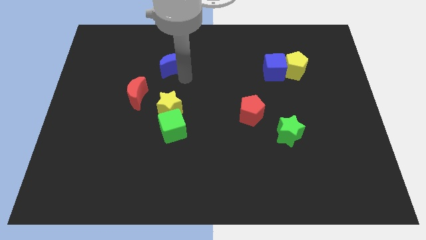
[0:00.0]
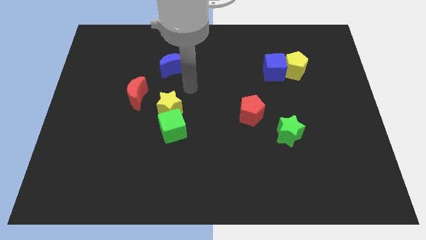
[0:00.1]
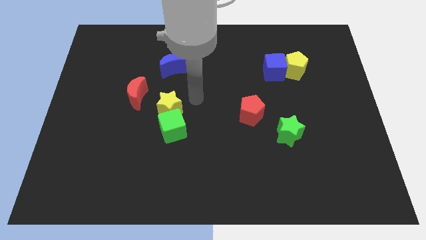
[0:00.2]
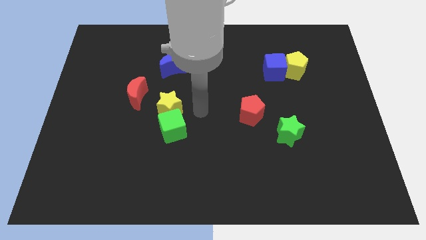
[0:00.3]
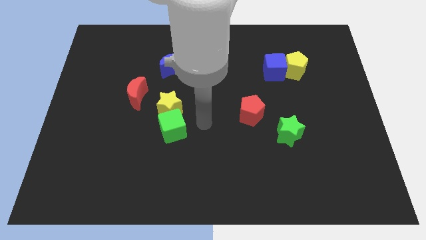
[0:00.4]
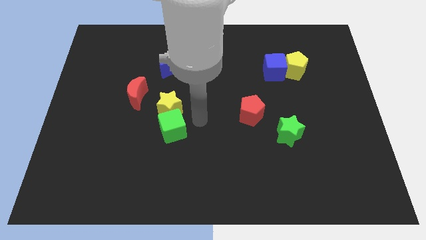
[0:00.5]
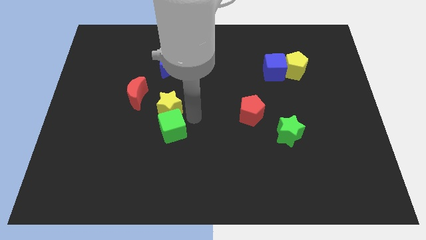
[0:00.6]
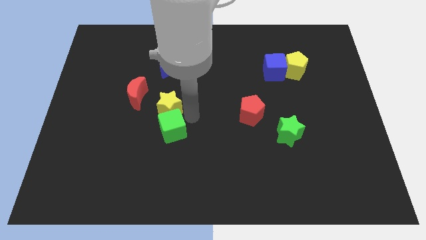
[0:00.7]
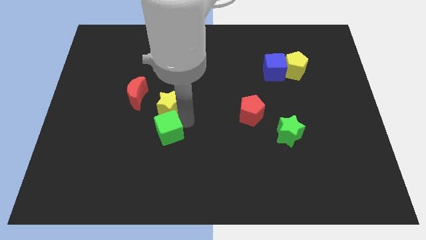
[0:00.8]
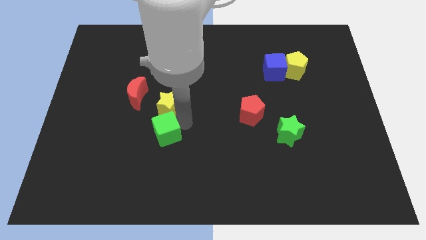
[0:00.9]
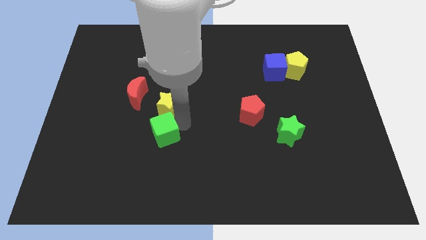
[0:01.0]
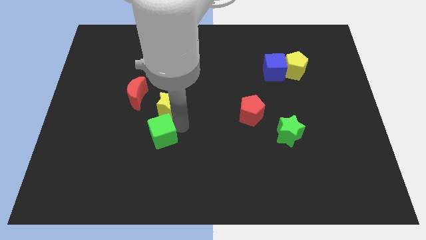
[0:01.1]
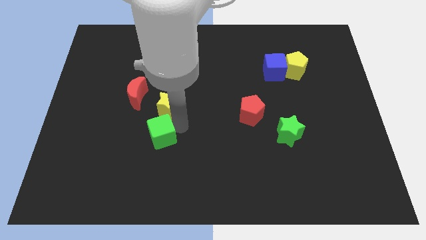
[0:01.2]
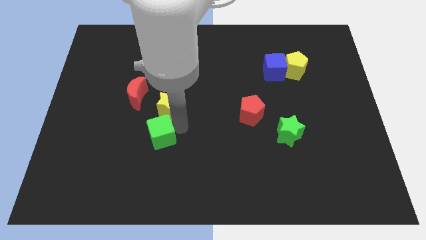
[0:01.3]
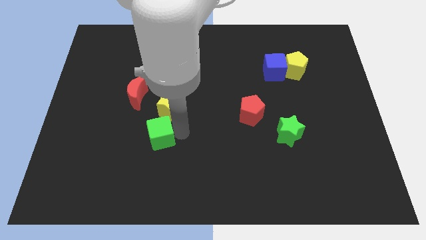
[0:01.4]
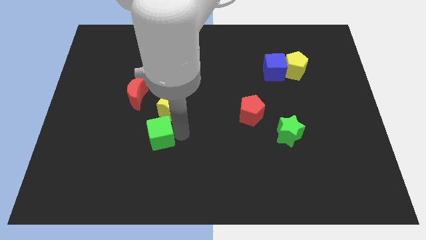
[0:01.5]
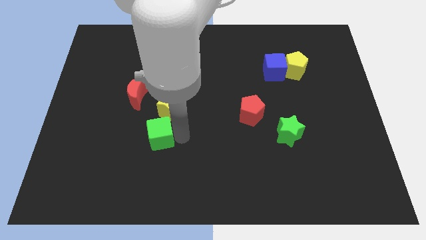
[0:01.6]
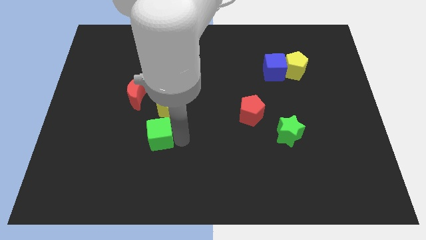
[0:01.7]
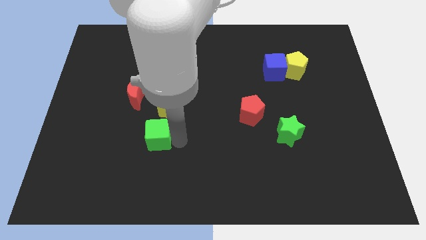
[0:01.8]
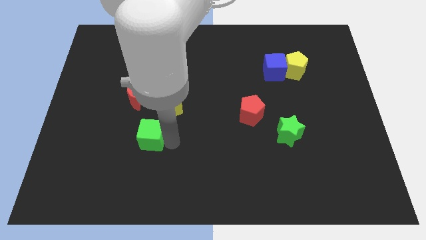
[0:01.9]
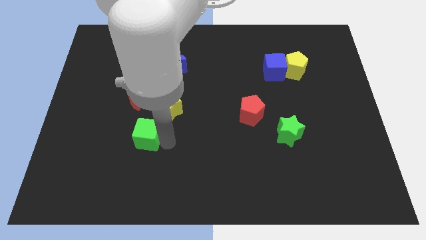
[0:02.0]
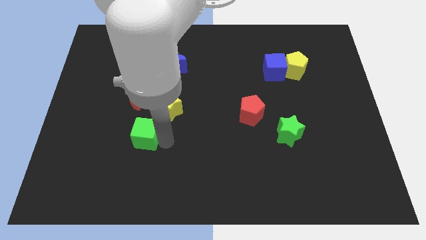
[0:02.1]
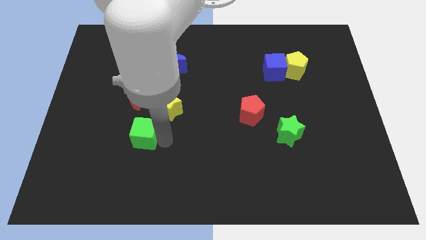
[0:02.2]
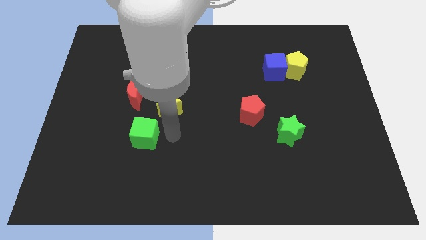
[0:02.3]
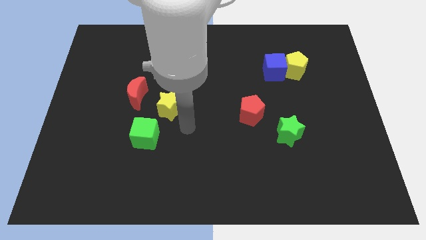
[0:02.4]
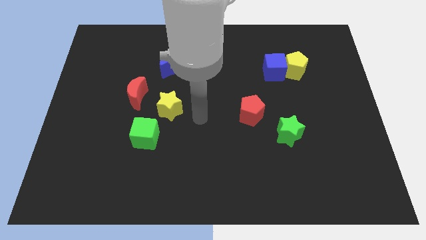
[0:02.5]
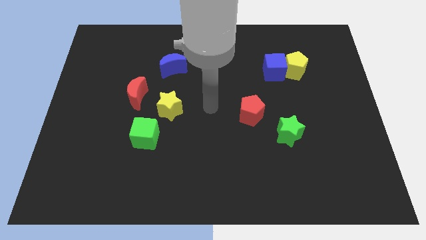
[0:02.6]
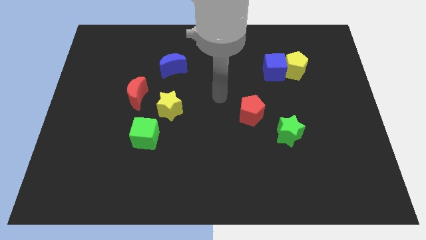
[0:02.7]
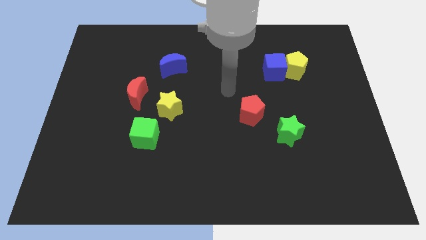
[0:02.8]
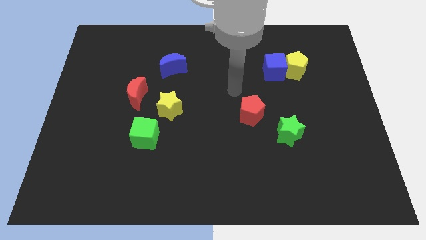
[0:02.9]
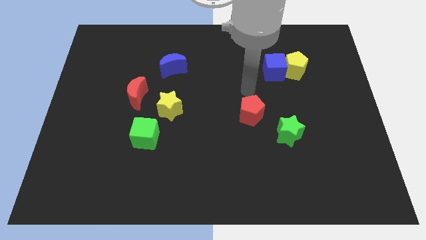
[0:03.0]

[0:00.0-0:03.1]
push the green cube to the bottom left side of the yellow star

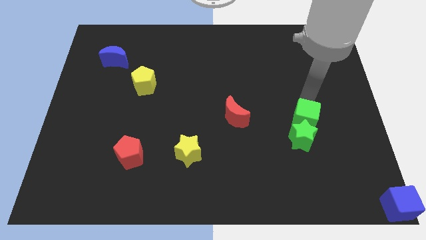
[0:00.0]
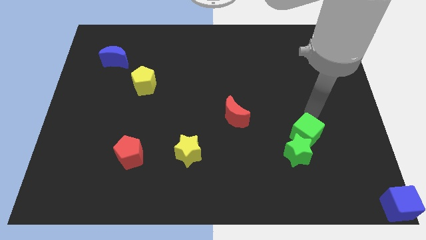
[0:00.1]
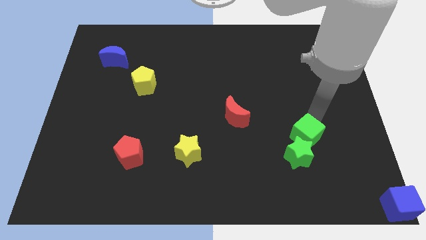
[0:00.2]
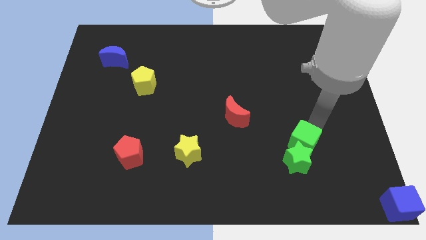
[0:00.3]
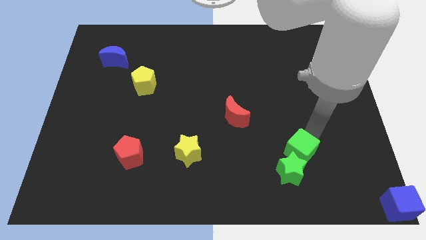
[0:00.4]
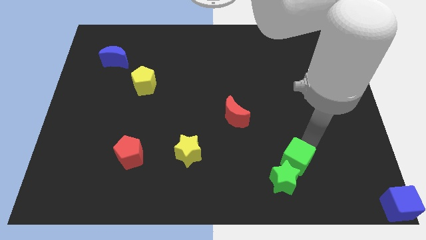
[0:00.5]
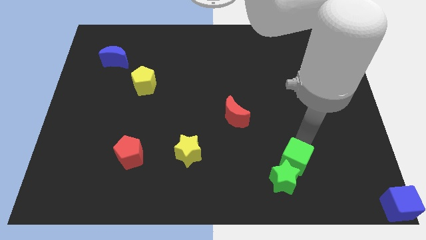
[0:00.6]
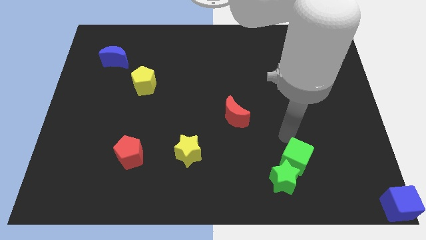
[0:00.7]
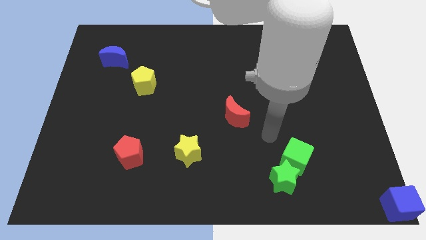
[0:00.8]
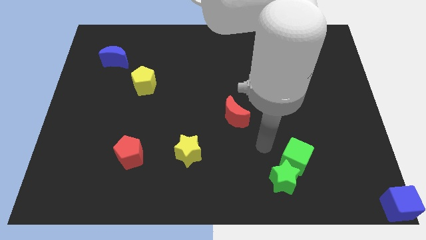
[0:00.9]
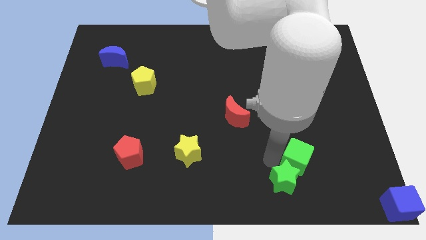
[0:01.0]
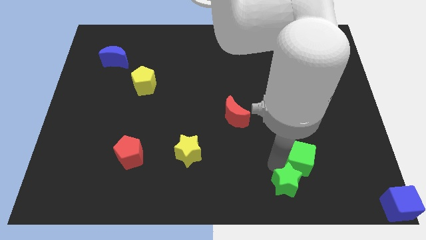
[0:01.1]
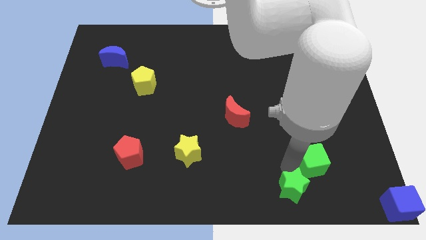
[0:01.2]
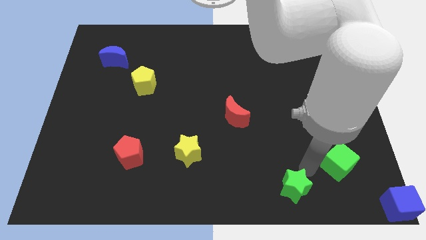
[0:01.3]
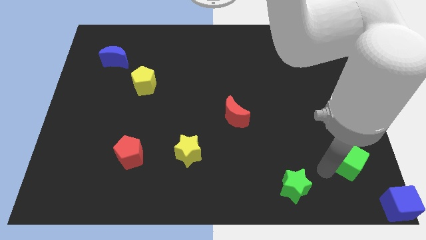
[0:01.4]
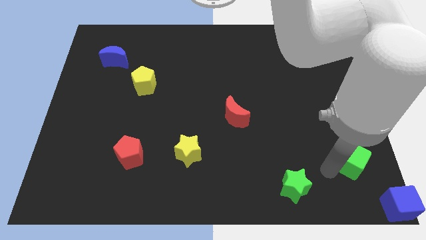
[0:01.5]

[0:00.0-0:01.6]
separate green cube and the green star

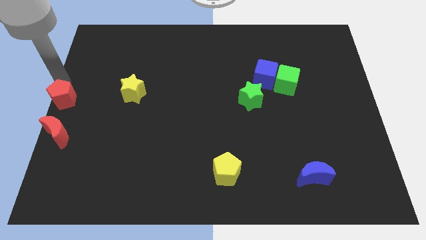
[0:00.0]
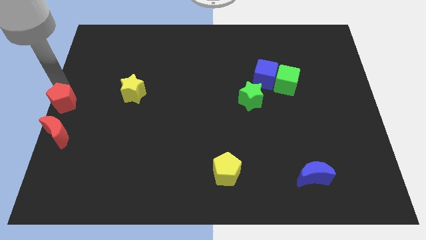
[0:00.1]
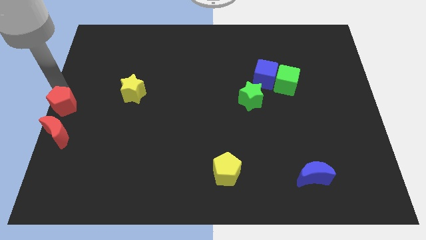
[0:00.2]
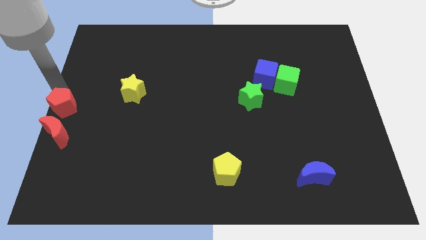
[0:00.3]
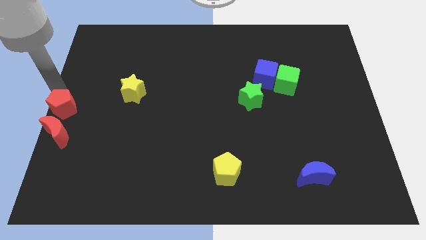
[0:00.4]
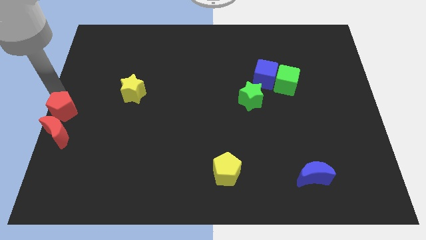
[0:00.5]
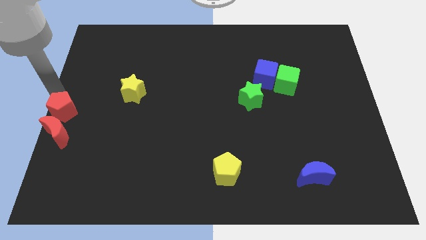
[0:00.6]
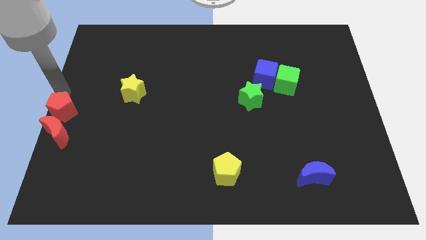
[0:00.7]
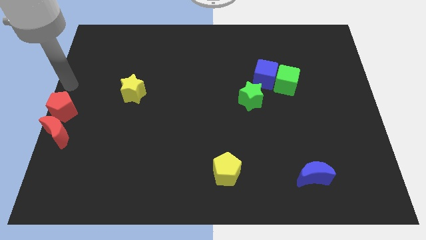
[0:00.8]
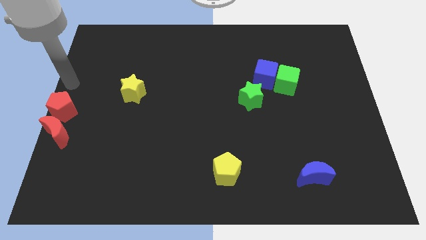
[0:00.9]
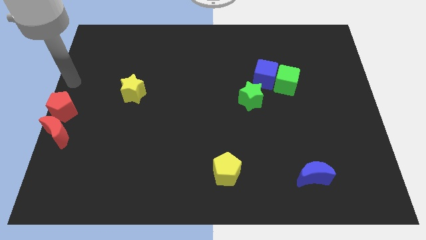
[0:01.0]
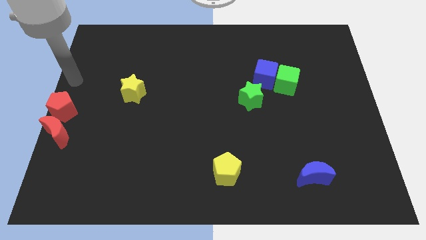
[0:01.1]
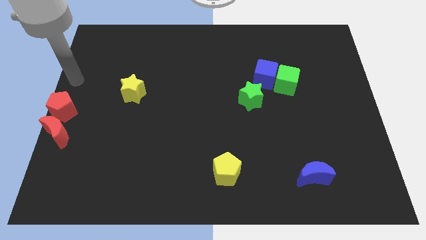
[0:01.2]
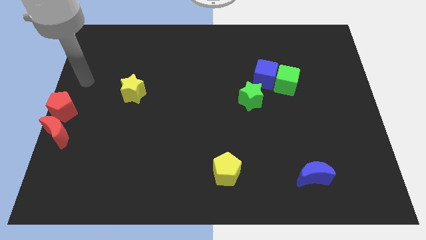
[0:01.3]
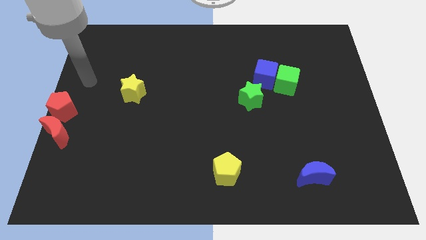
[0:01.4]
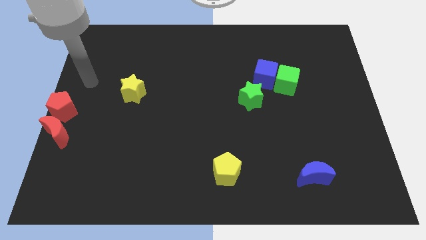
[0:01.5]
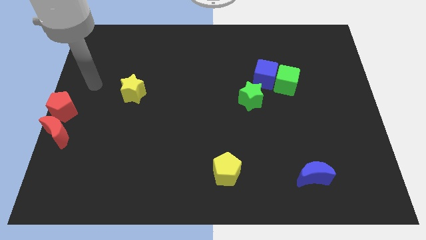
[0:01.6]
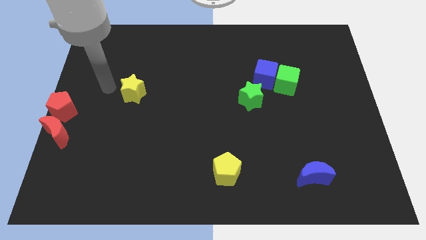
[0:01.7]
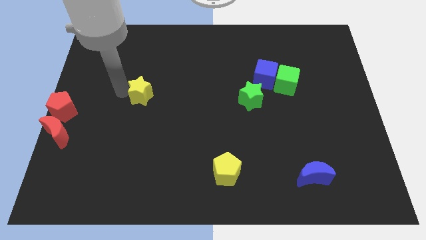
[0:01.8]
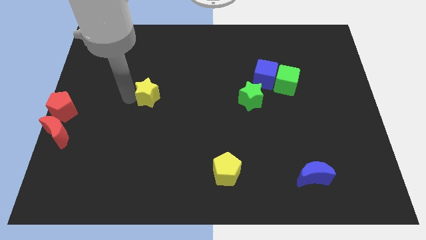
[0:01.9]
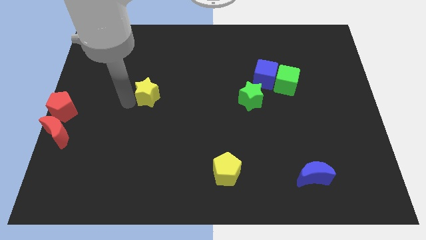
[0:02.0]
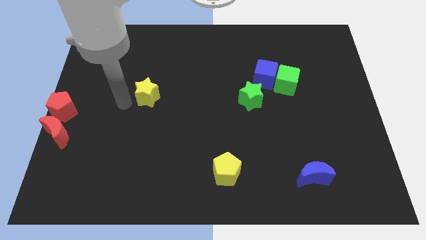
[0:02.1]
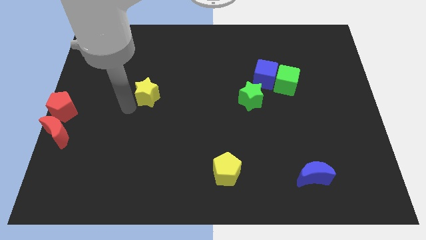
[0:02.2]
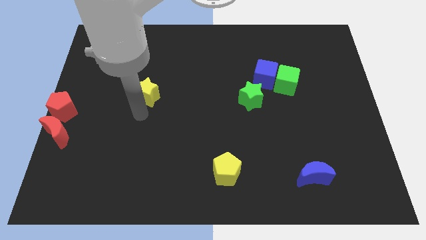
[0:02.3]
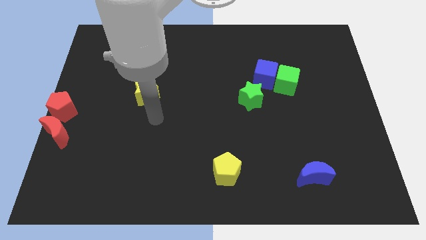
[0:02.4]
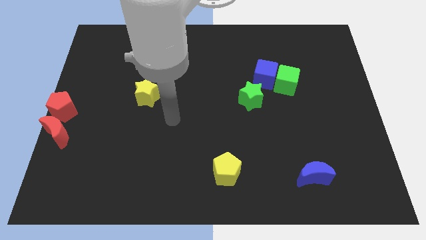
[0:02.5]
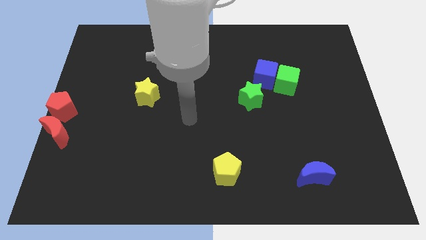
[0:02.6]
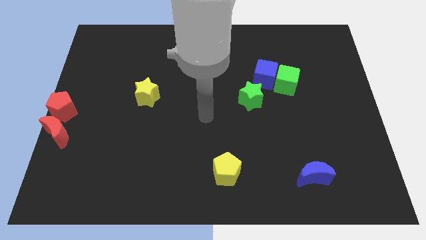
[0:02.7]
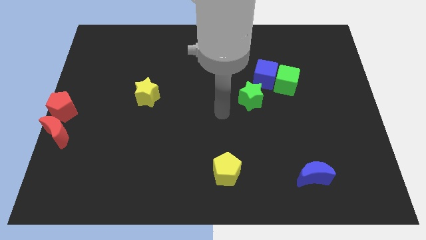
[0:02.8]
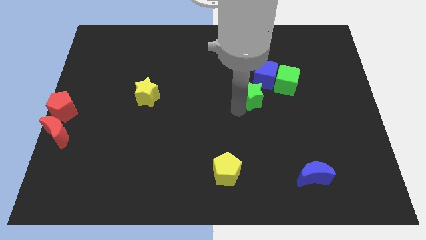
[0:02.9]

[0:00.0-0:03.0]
move your arm close to the green star

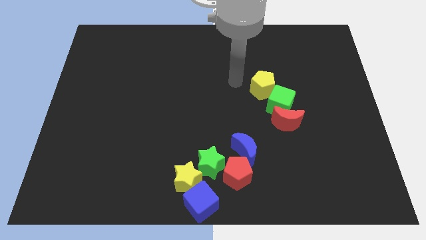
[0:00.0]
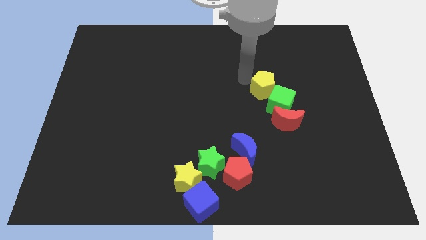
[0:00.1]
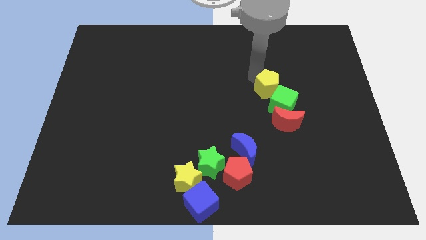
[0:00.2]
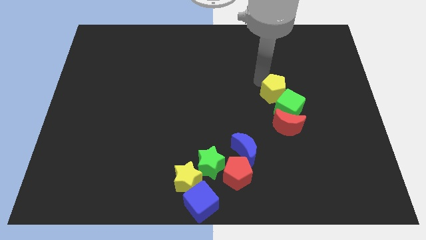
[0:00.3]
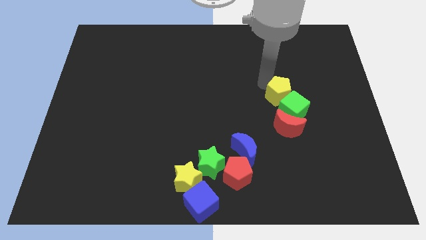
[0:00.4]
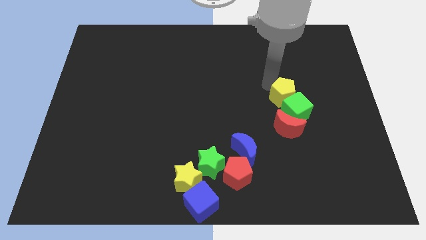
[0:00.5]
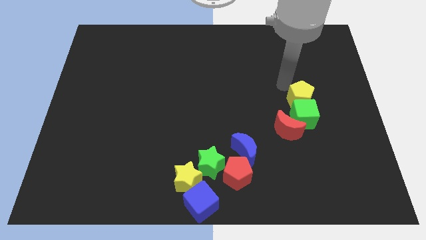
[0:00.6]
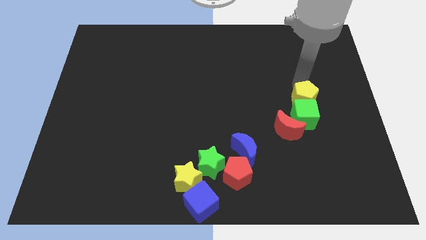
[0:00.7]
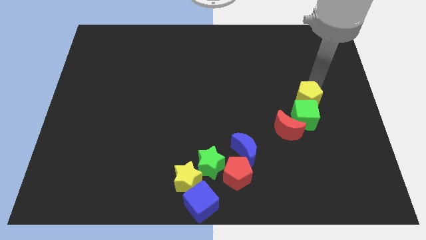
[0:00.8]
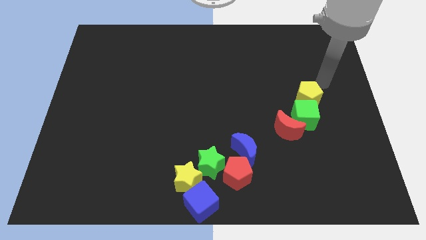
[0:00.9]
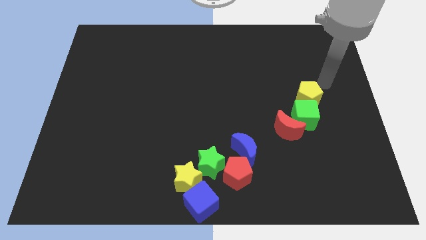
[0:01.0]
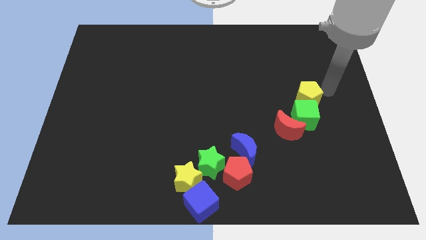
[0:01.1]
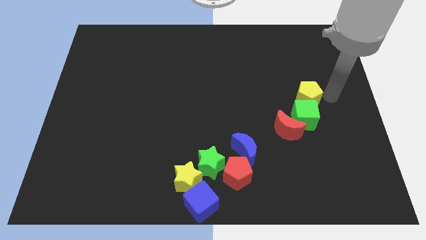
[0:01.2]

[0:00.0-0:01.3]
place yellow pentagon on the top of green cube
